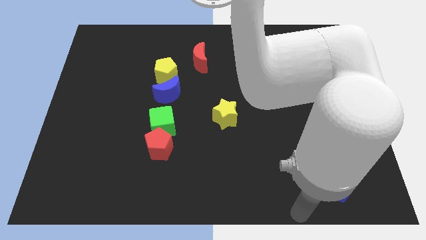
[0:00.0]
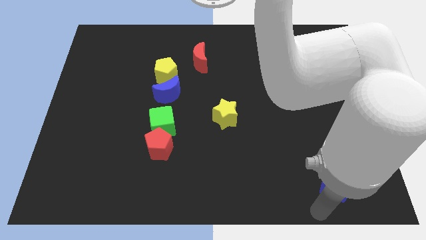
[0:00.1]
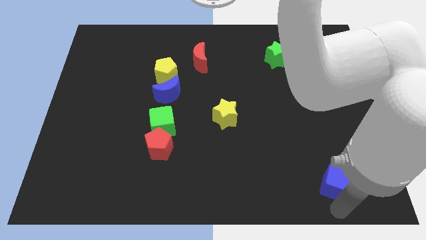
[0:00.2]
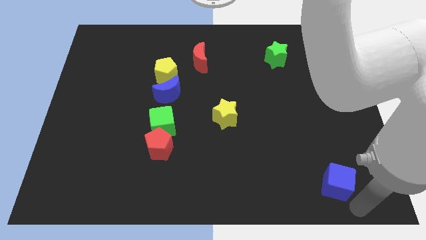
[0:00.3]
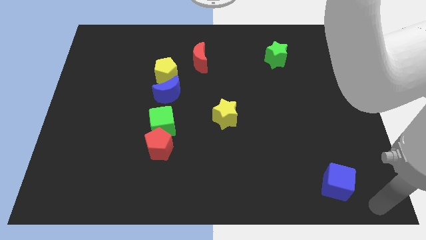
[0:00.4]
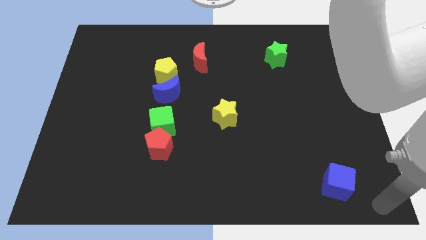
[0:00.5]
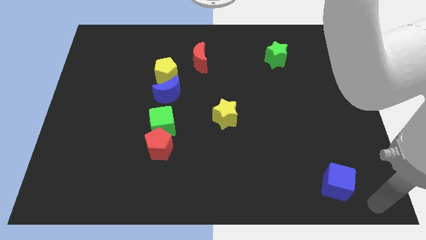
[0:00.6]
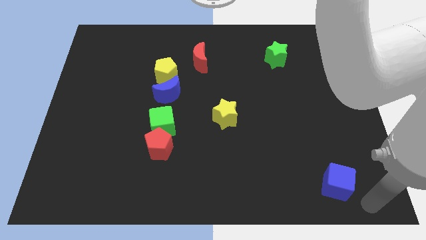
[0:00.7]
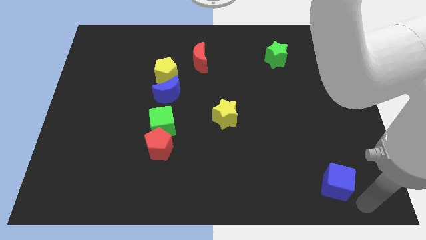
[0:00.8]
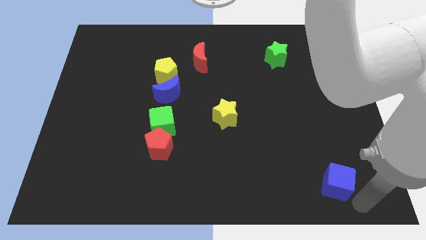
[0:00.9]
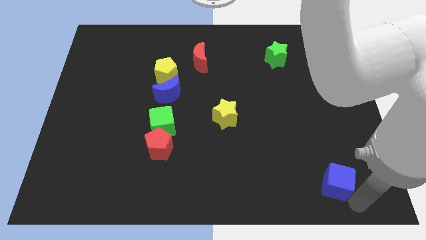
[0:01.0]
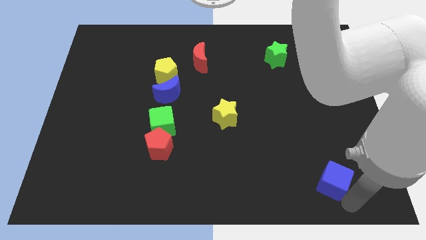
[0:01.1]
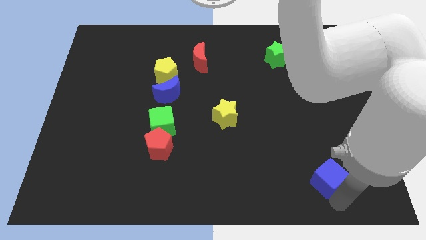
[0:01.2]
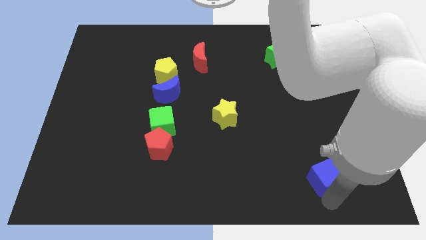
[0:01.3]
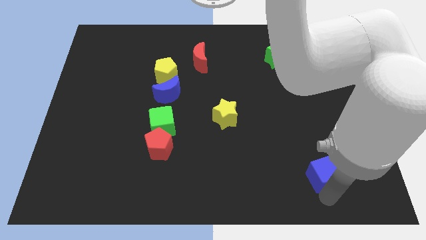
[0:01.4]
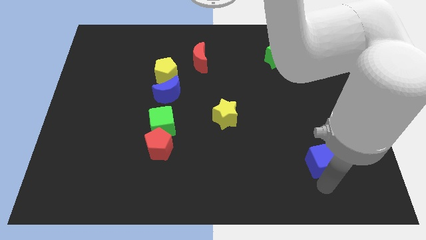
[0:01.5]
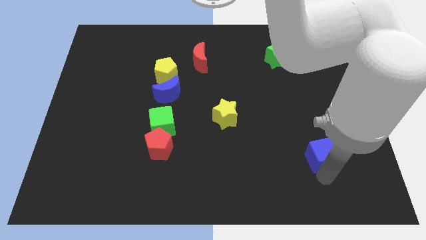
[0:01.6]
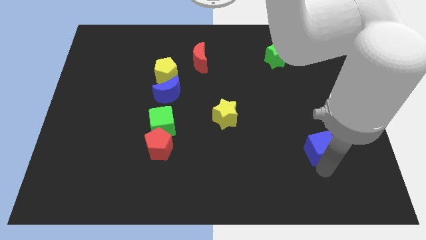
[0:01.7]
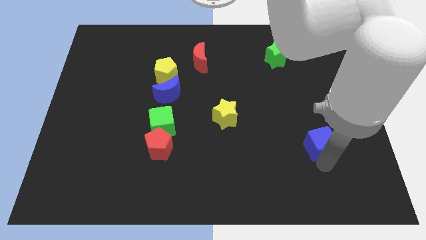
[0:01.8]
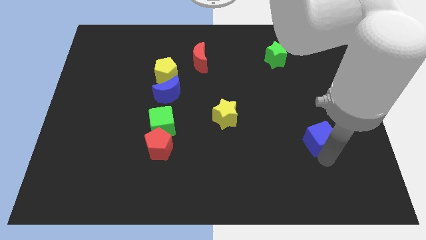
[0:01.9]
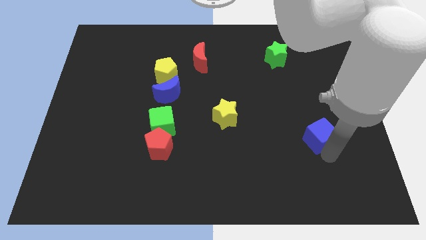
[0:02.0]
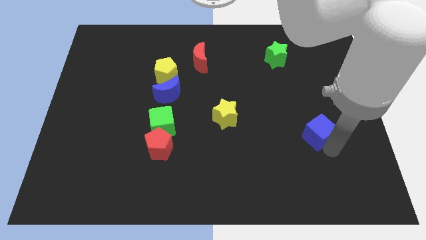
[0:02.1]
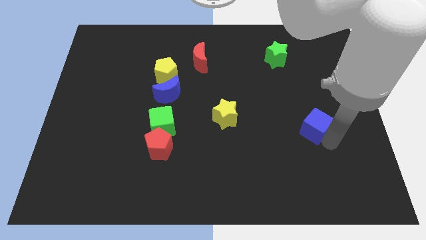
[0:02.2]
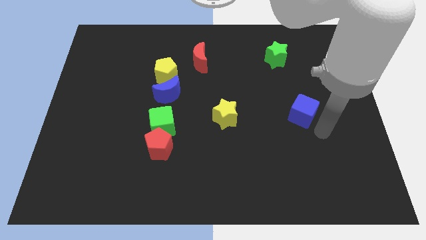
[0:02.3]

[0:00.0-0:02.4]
move the blue cube to the horizontal right of the yellow star

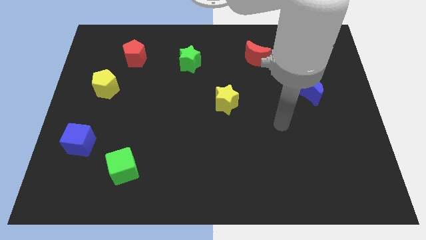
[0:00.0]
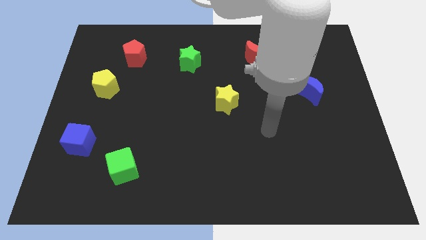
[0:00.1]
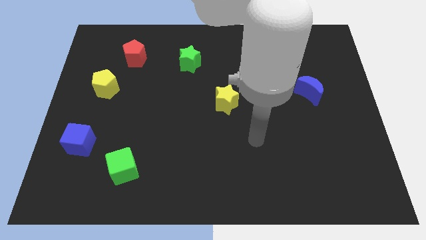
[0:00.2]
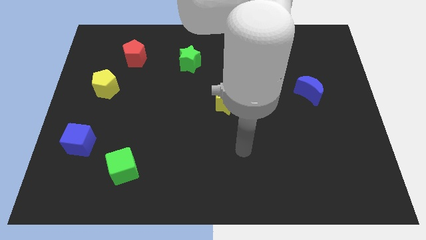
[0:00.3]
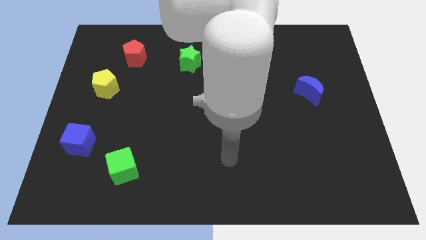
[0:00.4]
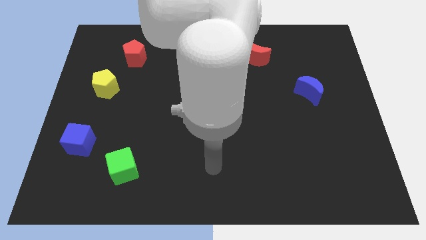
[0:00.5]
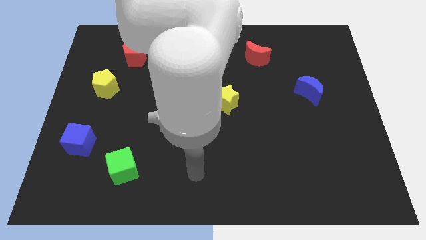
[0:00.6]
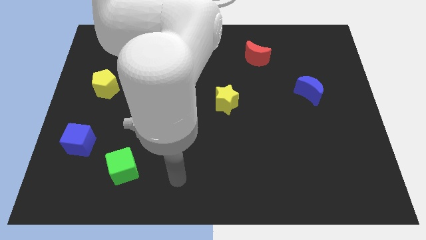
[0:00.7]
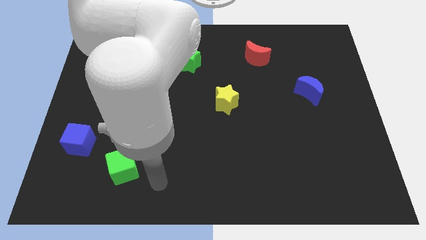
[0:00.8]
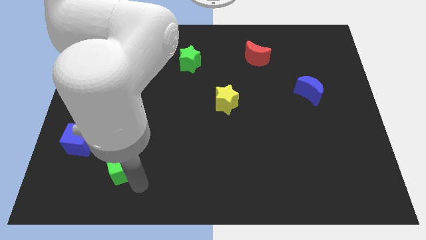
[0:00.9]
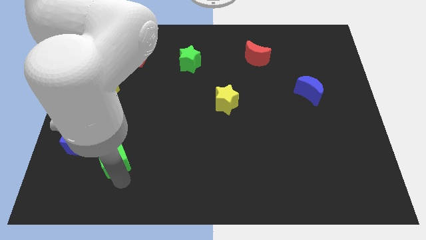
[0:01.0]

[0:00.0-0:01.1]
place arm on the bottom of green cube

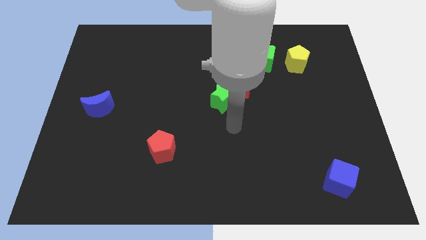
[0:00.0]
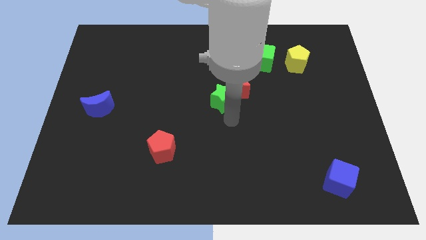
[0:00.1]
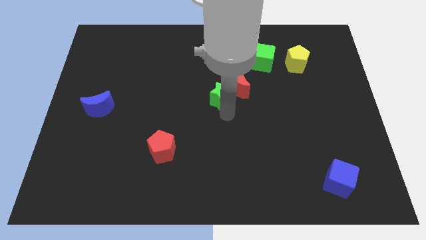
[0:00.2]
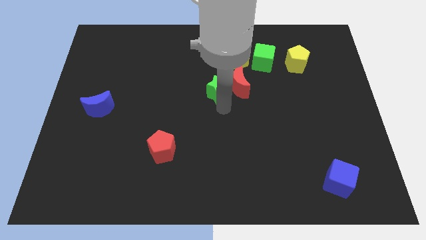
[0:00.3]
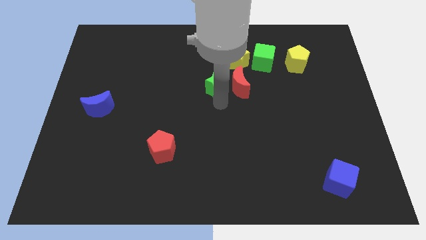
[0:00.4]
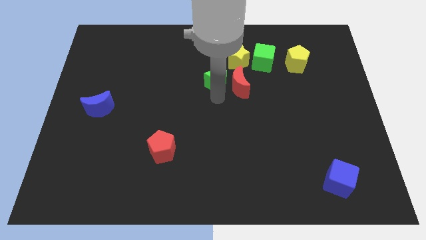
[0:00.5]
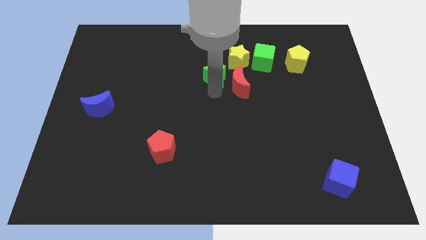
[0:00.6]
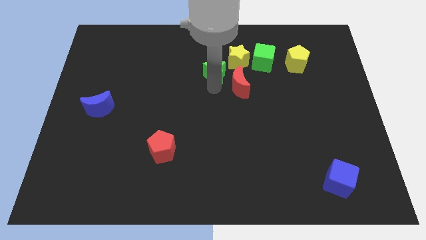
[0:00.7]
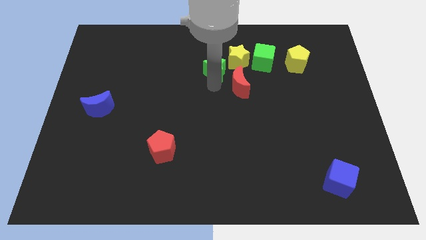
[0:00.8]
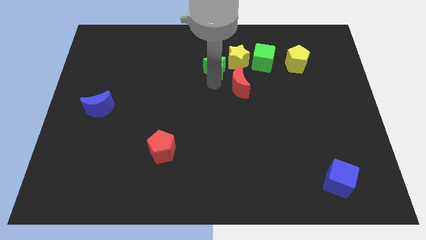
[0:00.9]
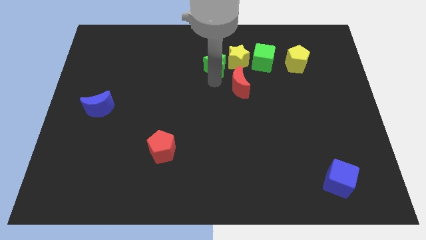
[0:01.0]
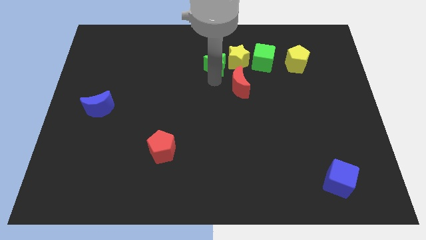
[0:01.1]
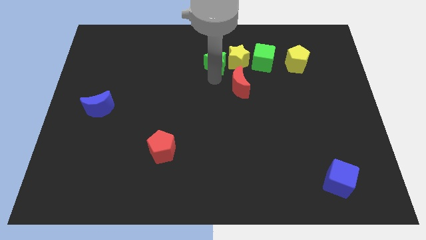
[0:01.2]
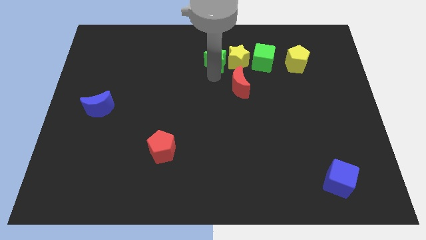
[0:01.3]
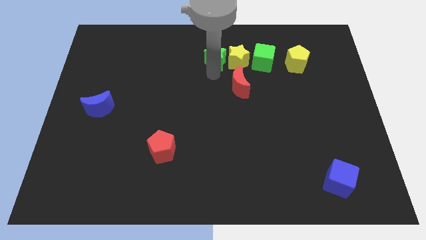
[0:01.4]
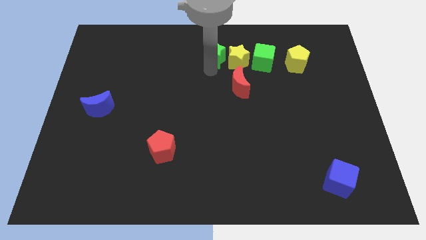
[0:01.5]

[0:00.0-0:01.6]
place the green star to the left side of the yellow star

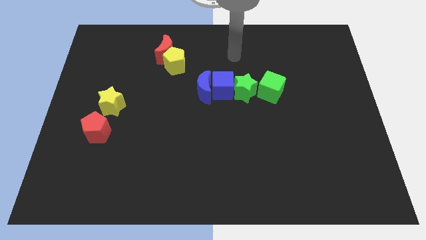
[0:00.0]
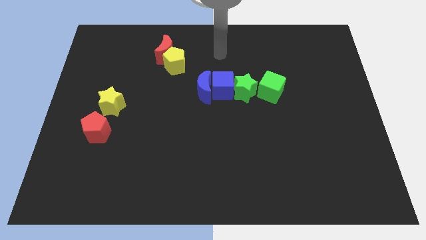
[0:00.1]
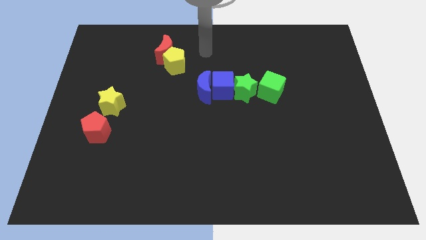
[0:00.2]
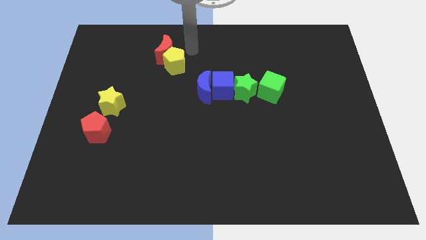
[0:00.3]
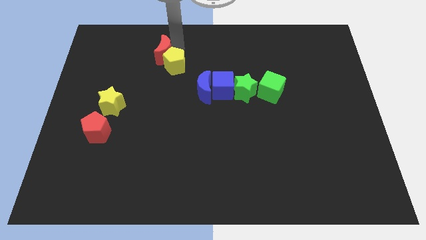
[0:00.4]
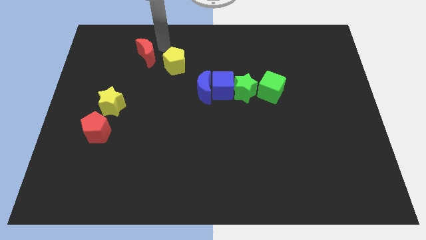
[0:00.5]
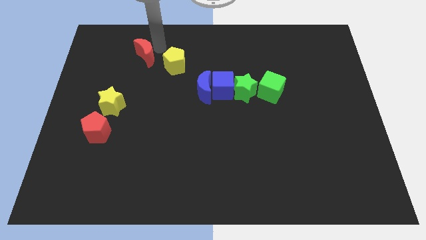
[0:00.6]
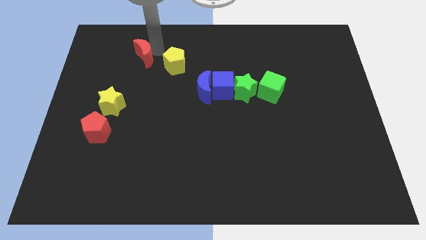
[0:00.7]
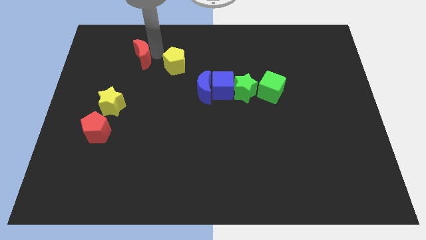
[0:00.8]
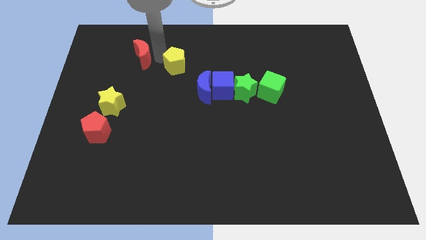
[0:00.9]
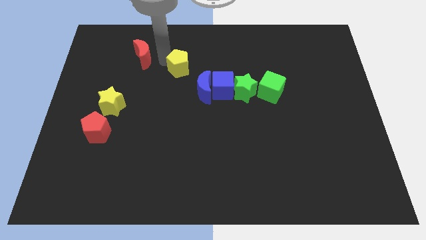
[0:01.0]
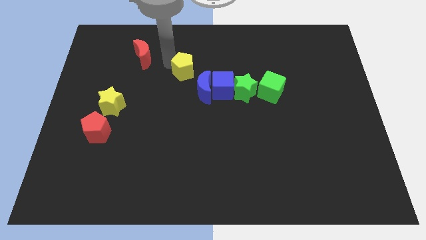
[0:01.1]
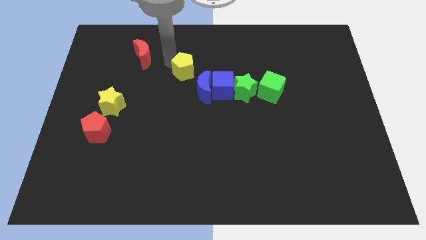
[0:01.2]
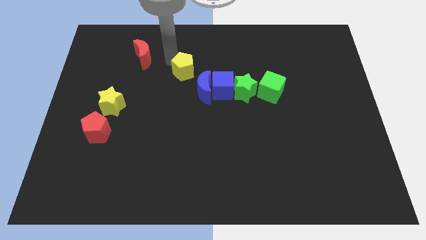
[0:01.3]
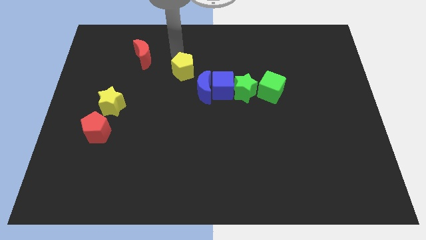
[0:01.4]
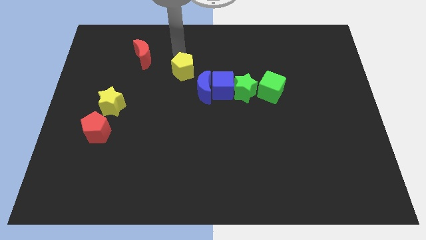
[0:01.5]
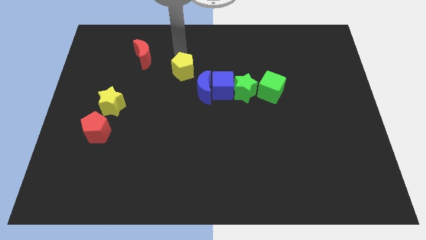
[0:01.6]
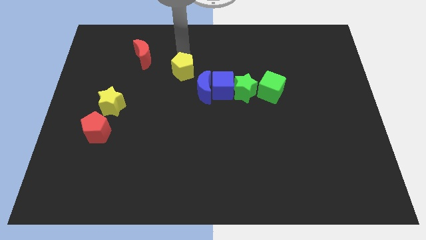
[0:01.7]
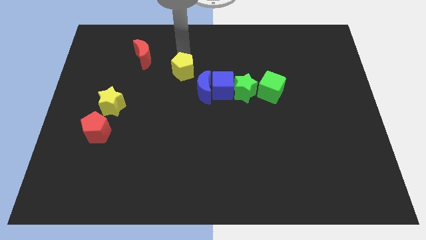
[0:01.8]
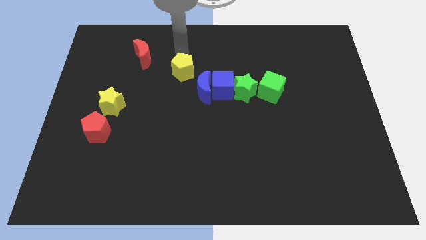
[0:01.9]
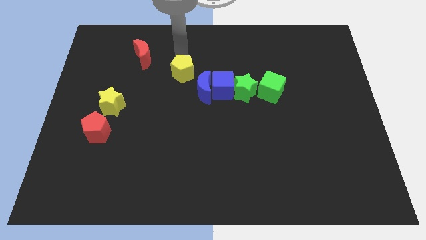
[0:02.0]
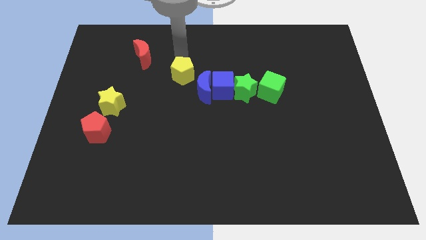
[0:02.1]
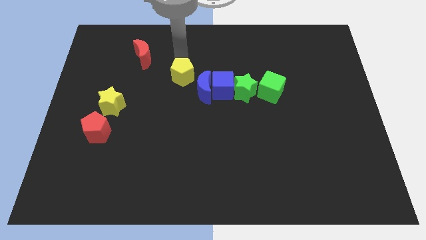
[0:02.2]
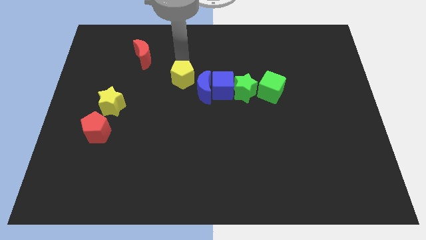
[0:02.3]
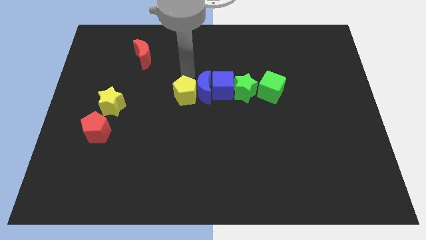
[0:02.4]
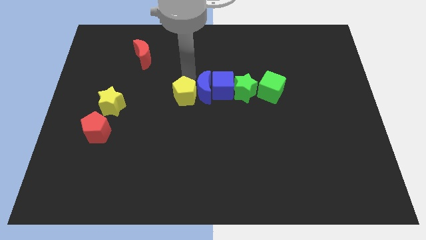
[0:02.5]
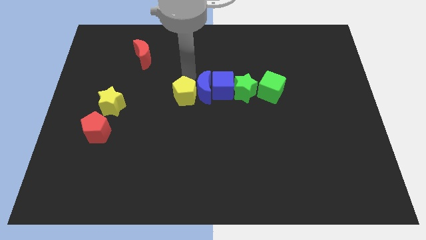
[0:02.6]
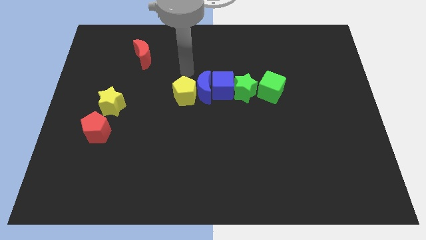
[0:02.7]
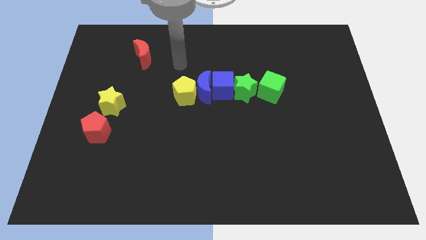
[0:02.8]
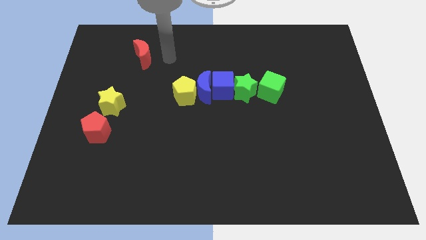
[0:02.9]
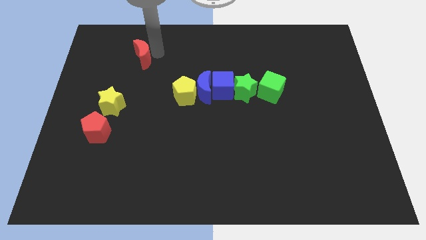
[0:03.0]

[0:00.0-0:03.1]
separate yellow pentagon from red moon

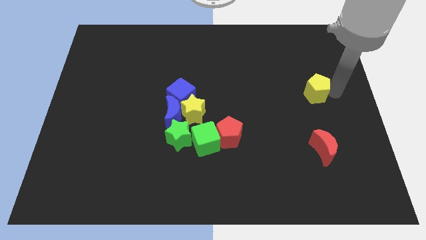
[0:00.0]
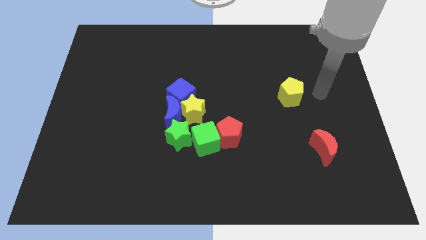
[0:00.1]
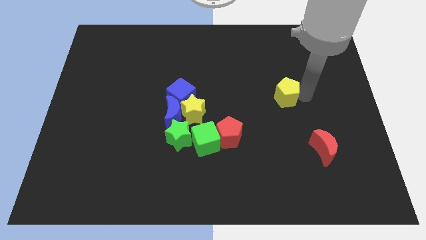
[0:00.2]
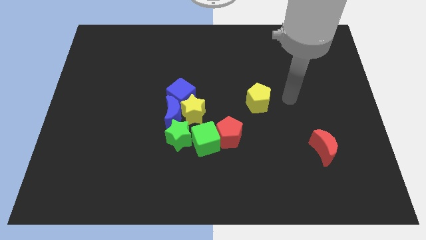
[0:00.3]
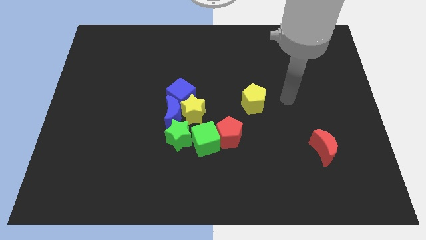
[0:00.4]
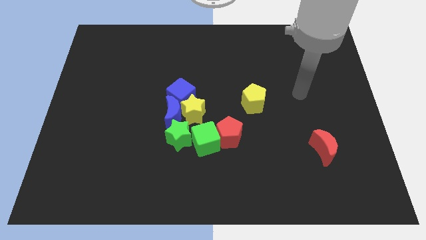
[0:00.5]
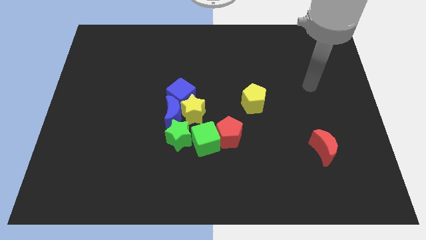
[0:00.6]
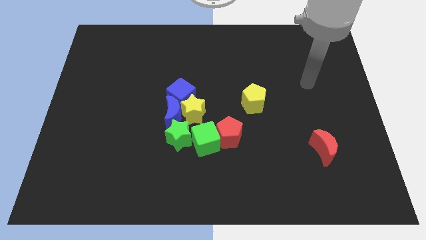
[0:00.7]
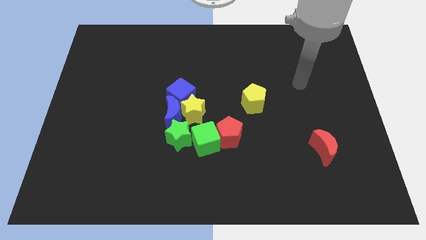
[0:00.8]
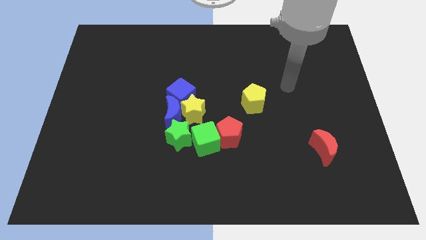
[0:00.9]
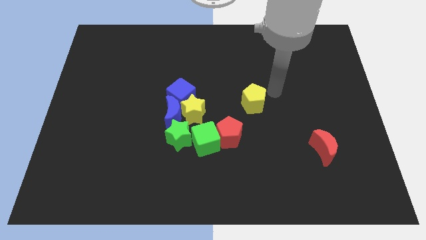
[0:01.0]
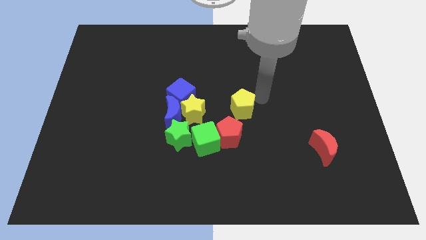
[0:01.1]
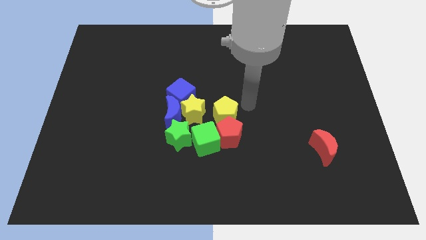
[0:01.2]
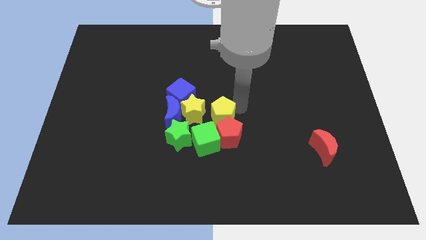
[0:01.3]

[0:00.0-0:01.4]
place yellow pentagon on the top of red pentagon
